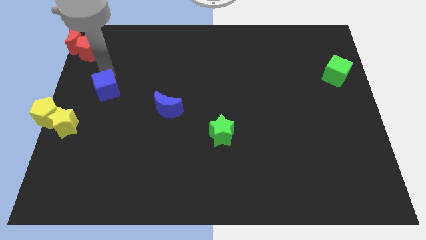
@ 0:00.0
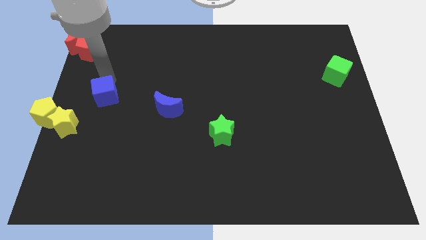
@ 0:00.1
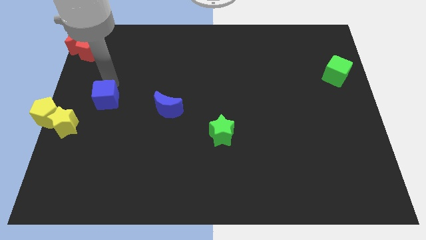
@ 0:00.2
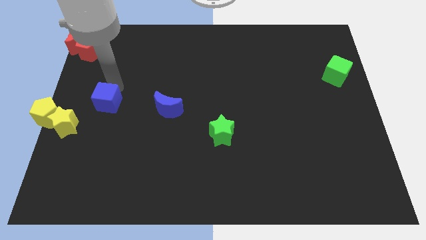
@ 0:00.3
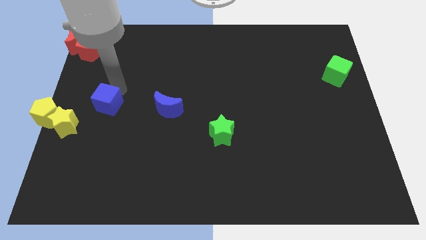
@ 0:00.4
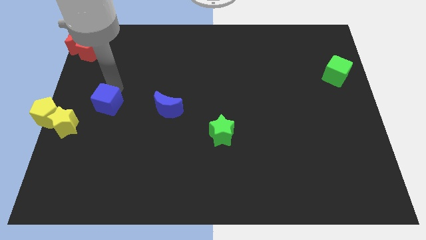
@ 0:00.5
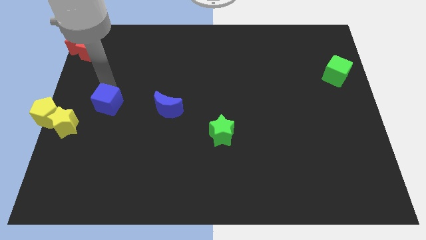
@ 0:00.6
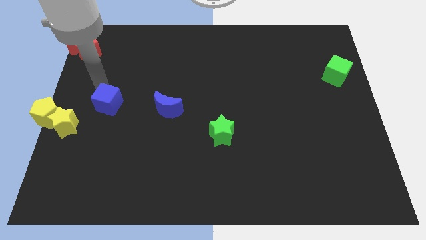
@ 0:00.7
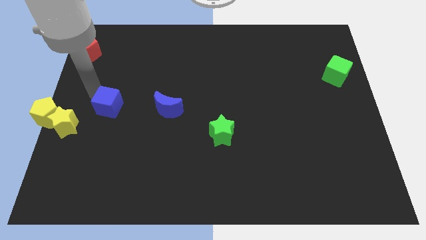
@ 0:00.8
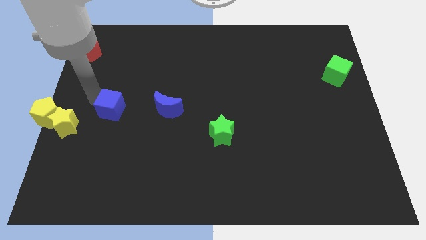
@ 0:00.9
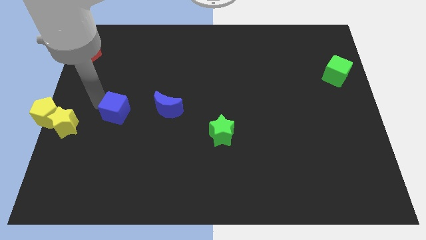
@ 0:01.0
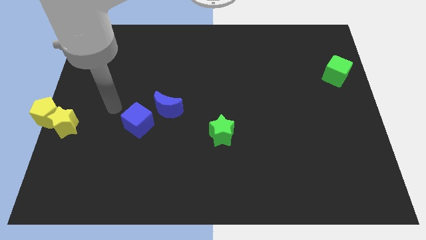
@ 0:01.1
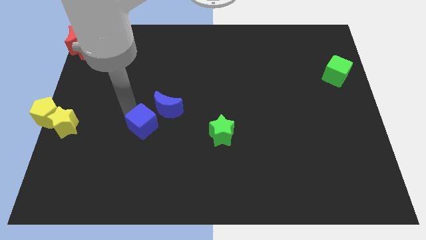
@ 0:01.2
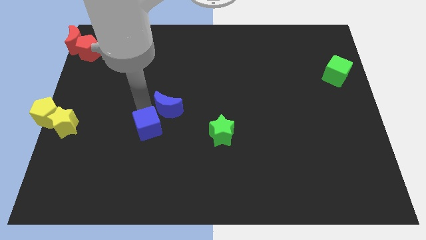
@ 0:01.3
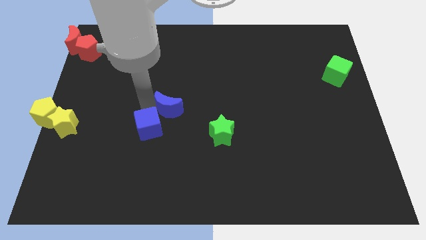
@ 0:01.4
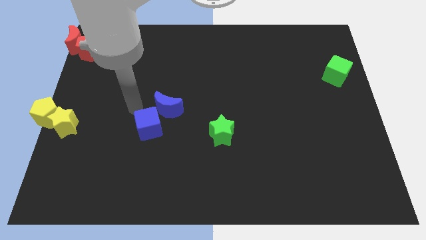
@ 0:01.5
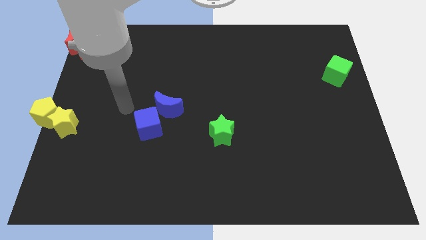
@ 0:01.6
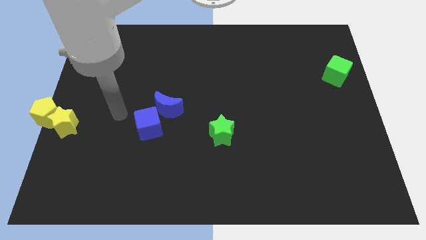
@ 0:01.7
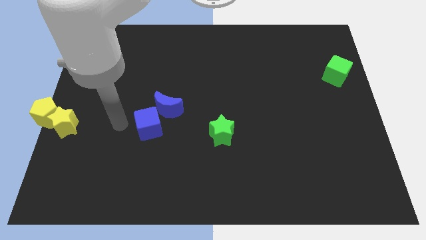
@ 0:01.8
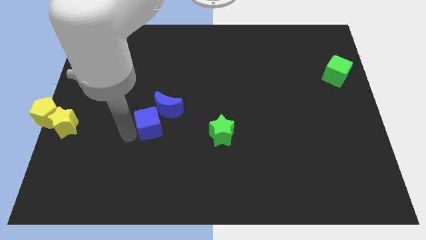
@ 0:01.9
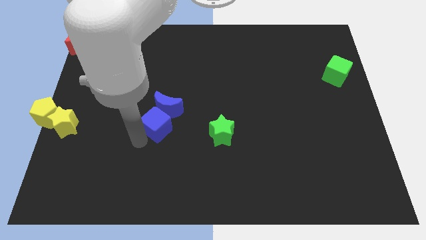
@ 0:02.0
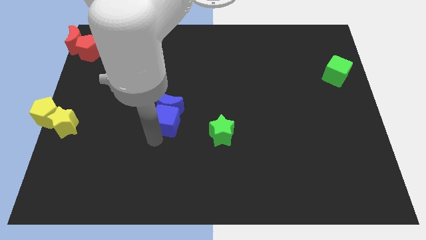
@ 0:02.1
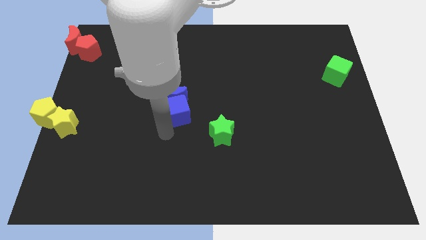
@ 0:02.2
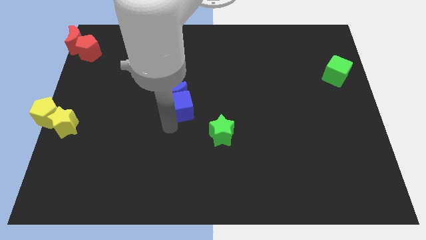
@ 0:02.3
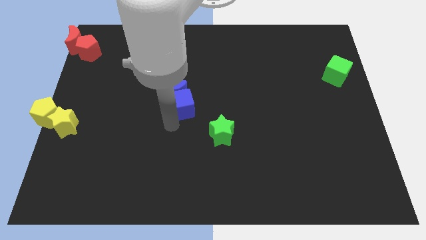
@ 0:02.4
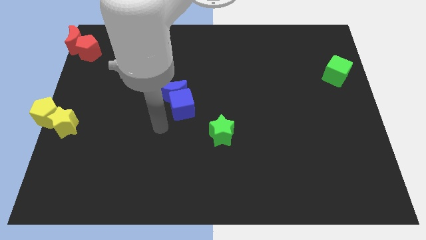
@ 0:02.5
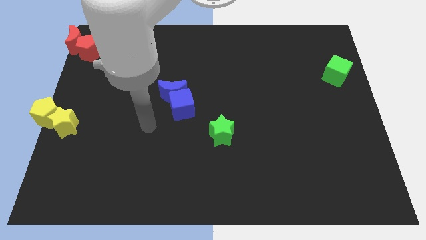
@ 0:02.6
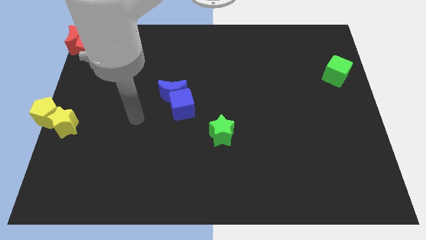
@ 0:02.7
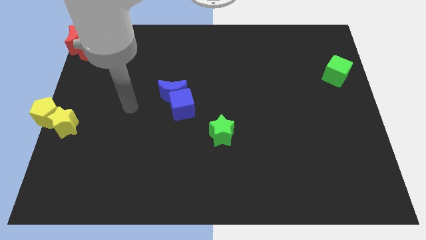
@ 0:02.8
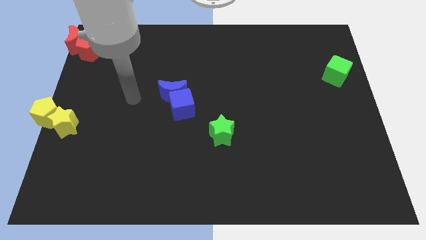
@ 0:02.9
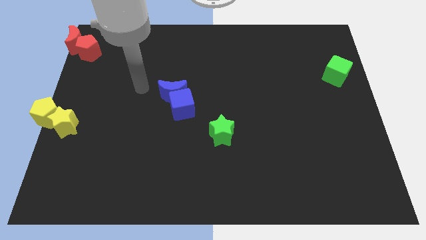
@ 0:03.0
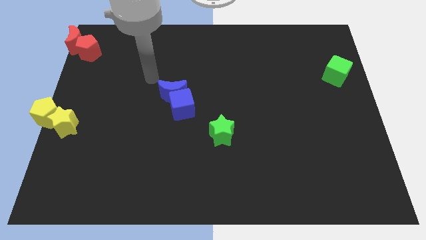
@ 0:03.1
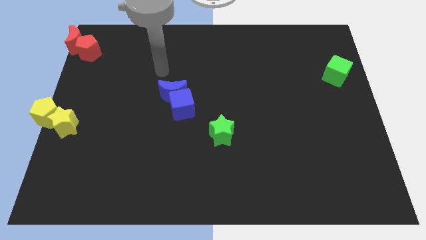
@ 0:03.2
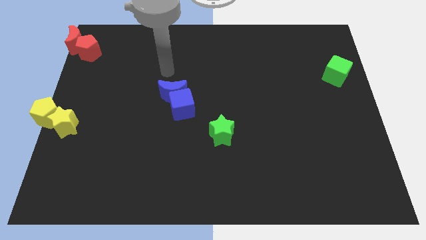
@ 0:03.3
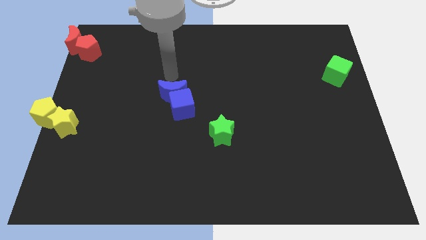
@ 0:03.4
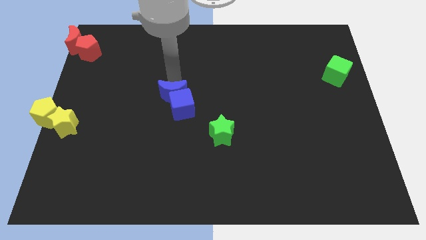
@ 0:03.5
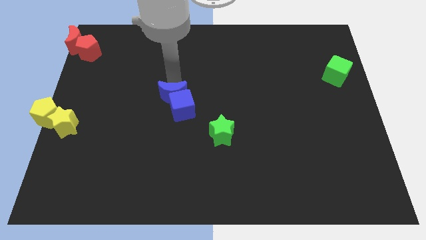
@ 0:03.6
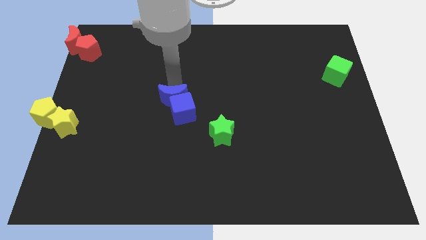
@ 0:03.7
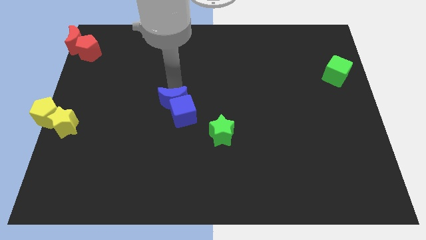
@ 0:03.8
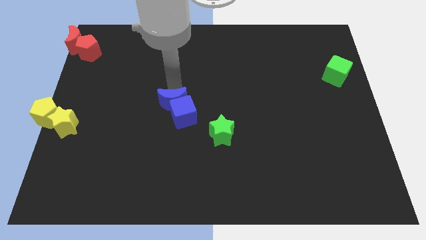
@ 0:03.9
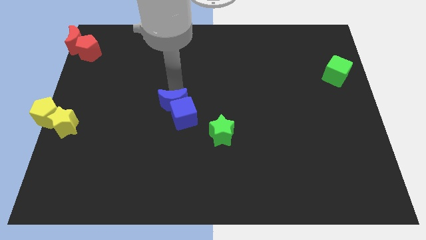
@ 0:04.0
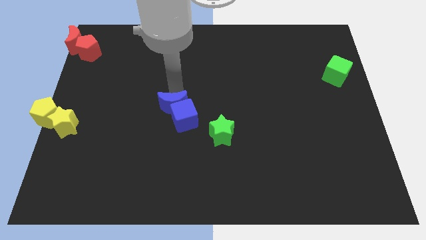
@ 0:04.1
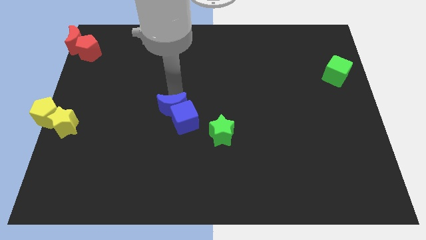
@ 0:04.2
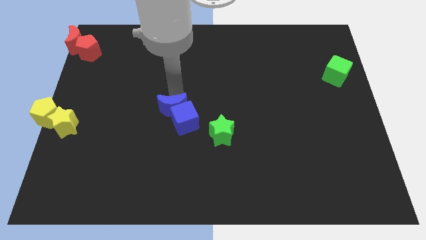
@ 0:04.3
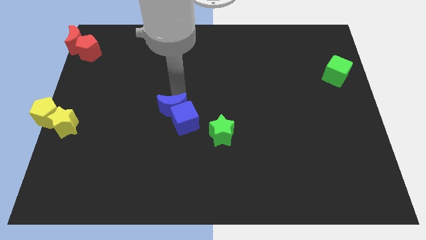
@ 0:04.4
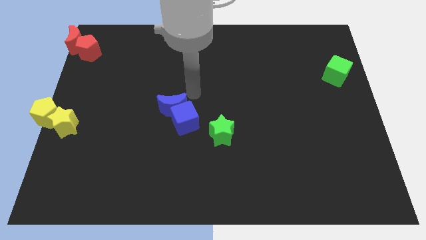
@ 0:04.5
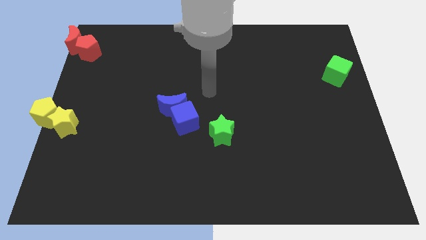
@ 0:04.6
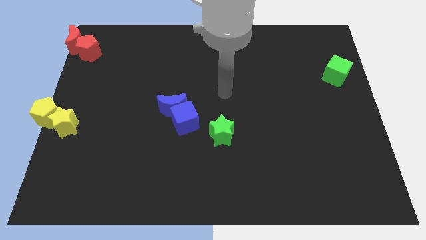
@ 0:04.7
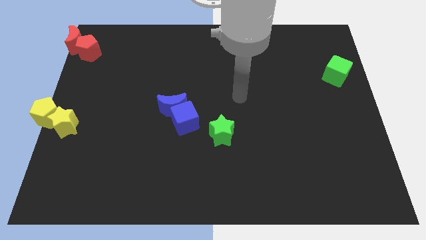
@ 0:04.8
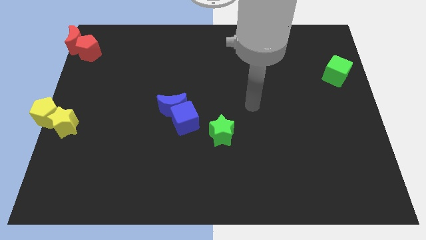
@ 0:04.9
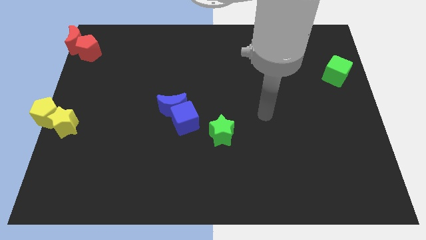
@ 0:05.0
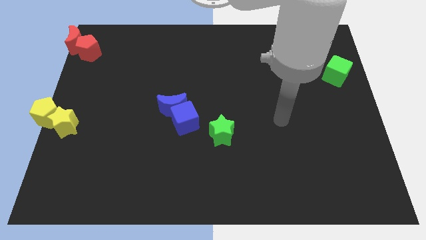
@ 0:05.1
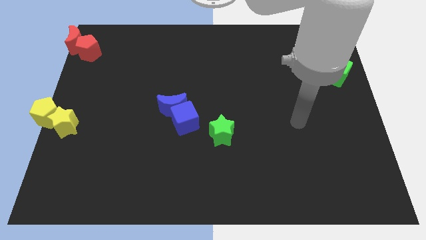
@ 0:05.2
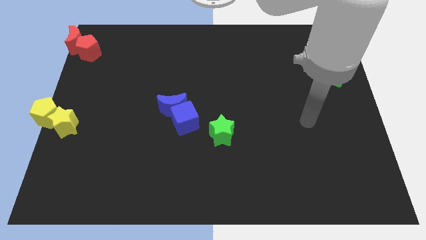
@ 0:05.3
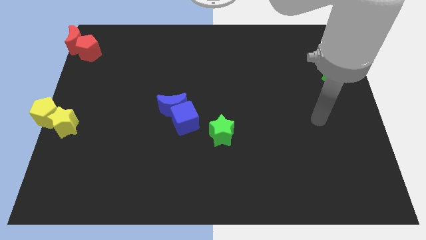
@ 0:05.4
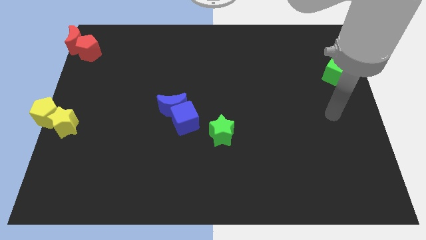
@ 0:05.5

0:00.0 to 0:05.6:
move the blue cube to the bottom of the blue moon

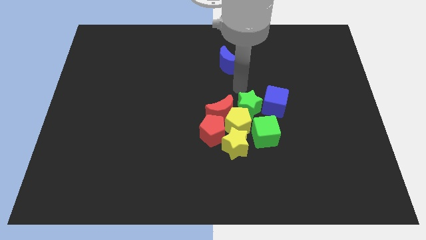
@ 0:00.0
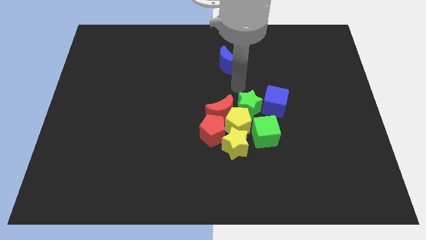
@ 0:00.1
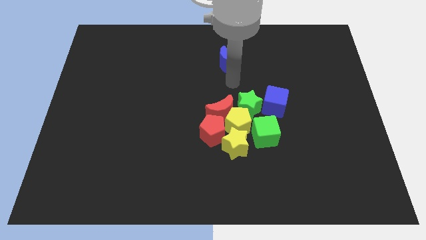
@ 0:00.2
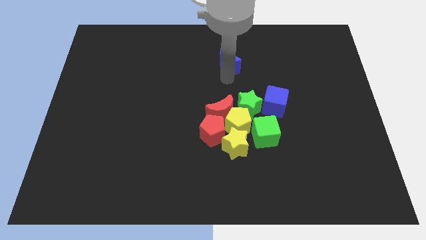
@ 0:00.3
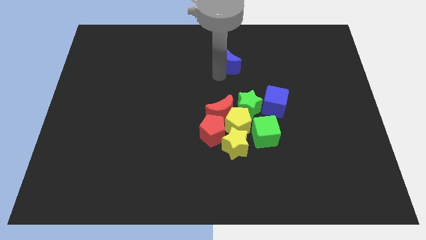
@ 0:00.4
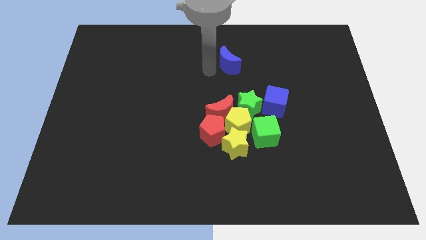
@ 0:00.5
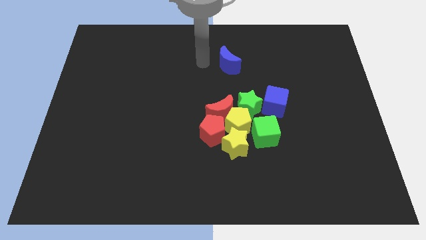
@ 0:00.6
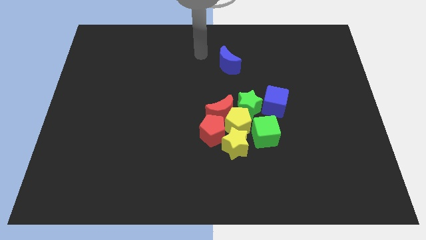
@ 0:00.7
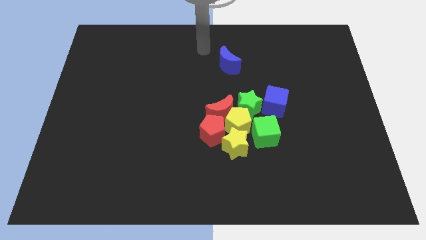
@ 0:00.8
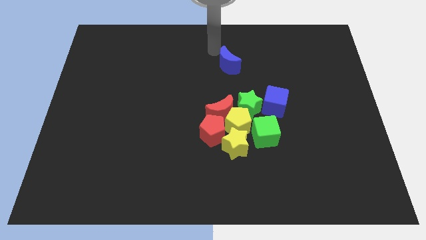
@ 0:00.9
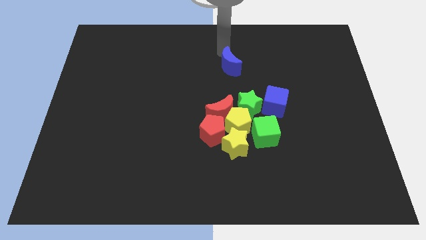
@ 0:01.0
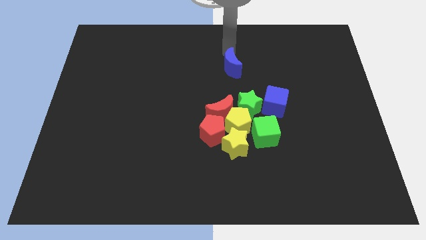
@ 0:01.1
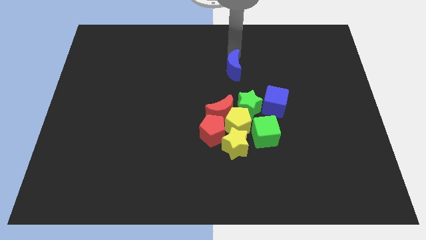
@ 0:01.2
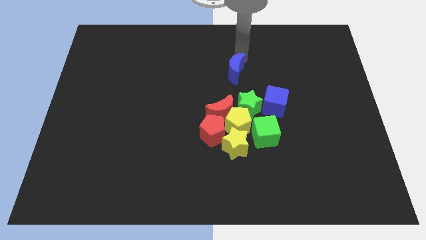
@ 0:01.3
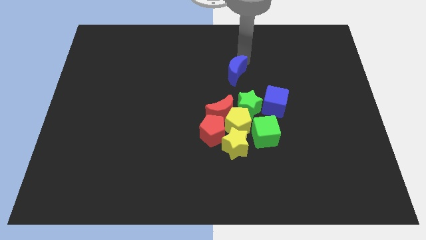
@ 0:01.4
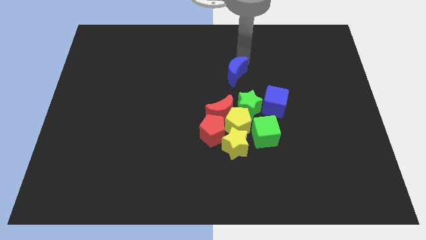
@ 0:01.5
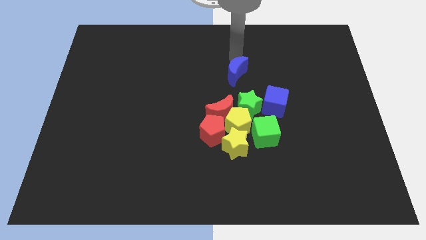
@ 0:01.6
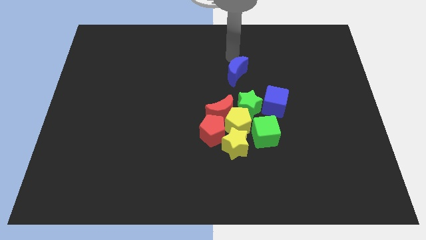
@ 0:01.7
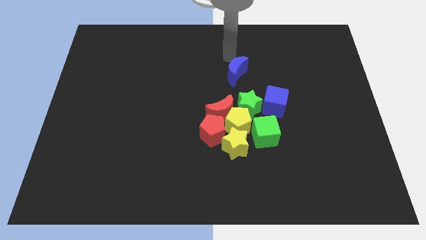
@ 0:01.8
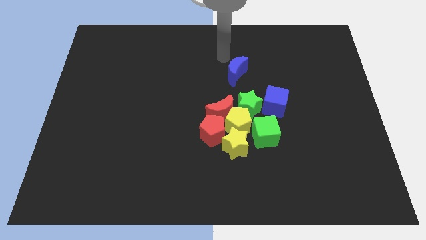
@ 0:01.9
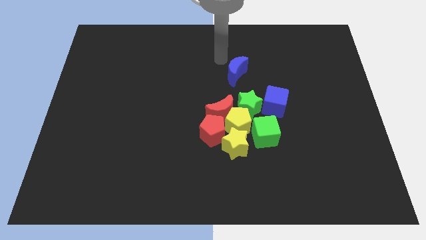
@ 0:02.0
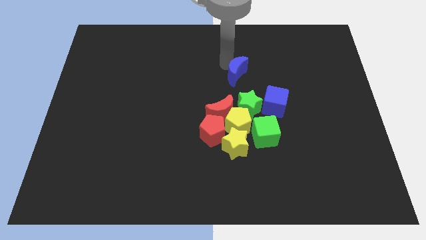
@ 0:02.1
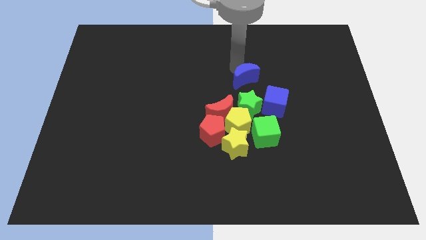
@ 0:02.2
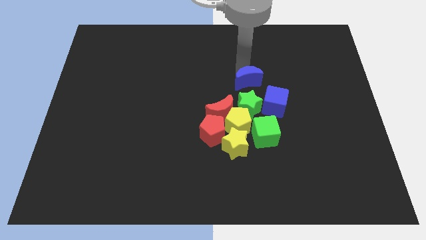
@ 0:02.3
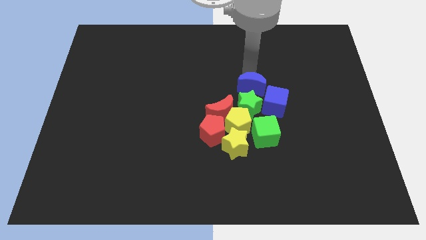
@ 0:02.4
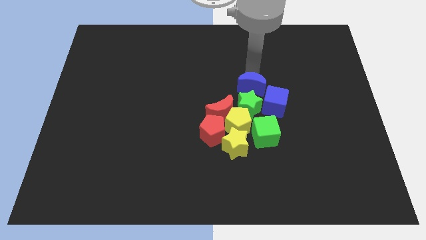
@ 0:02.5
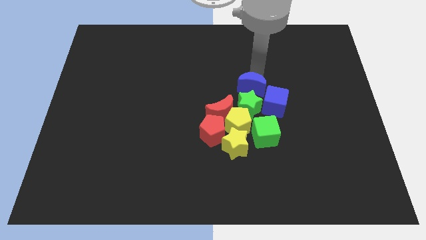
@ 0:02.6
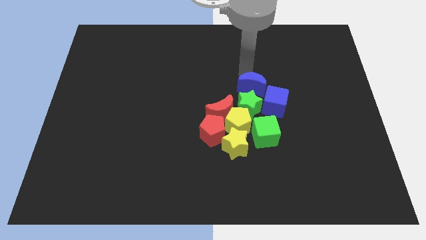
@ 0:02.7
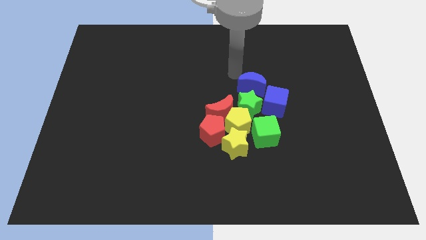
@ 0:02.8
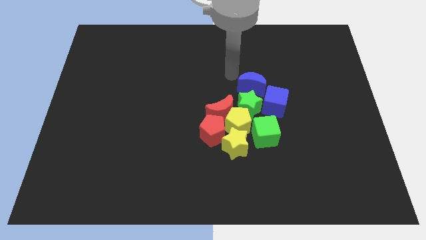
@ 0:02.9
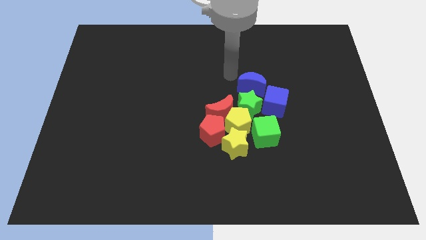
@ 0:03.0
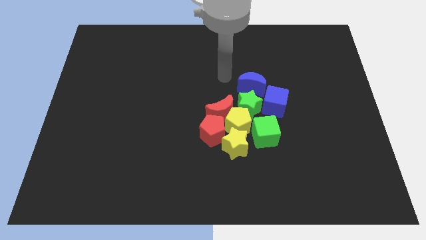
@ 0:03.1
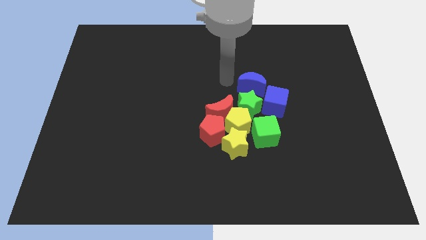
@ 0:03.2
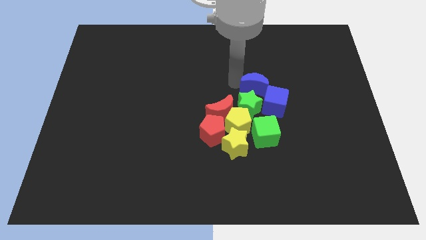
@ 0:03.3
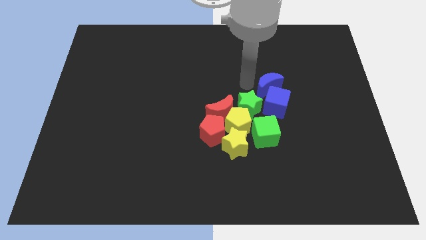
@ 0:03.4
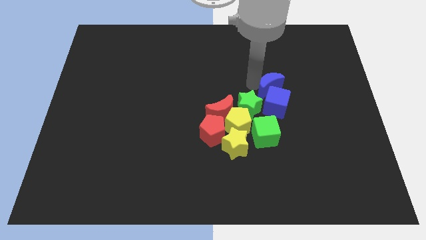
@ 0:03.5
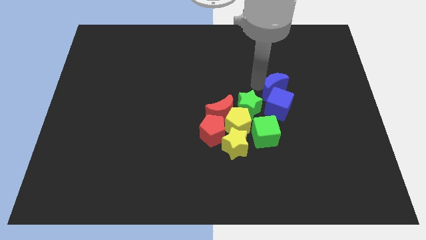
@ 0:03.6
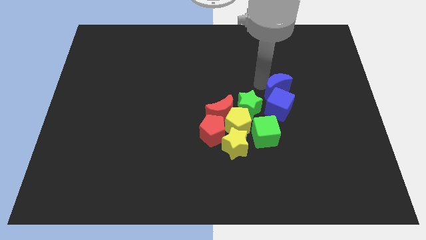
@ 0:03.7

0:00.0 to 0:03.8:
slide the blue moon into the group of blocks
